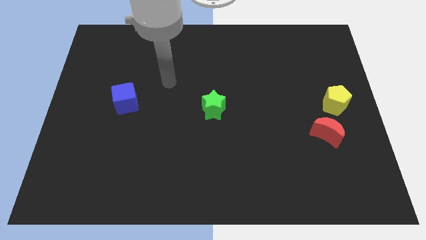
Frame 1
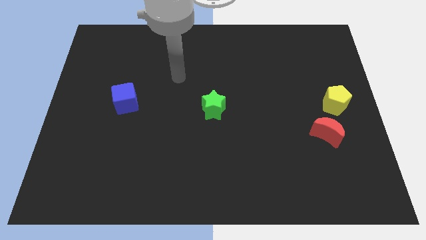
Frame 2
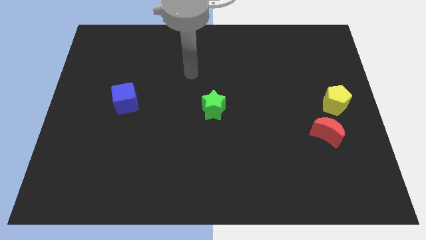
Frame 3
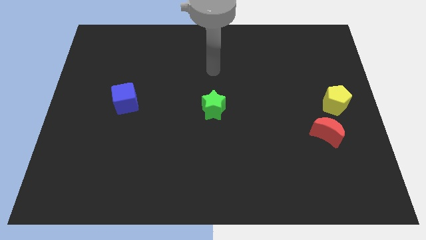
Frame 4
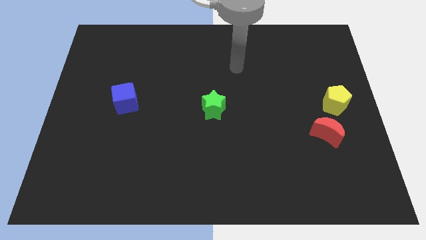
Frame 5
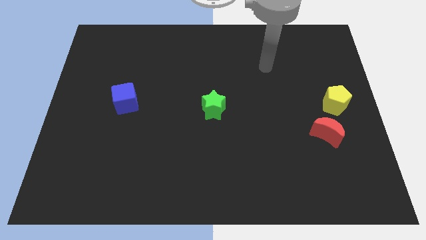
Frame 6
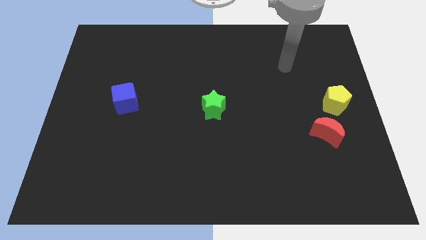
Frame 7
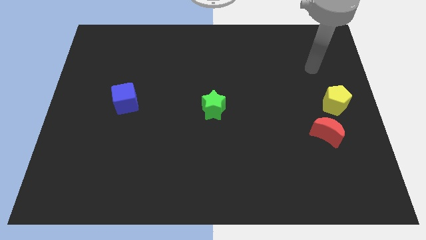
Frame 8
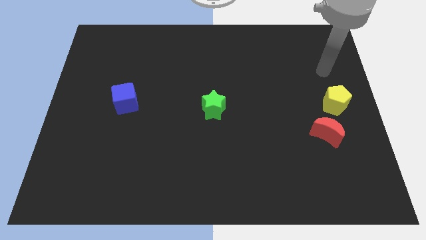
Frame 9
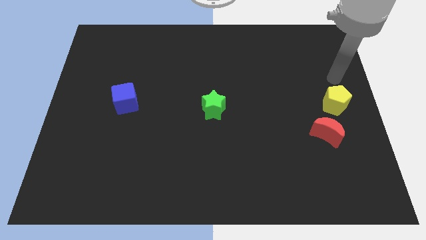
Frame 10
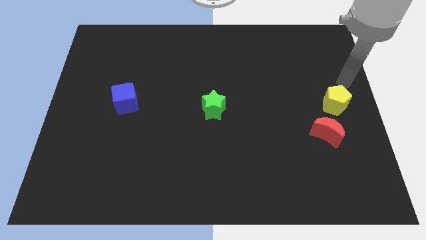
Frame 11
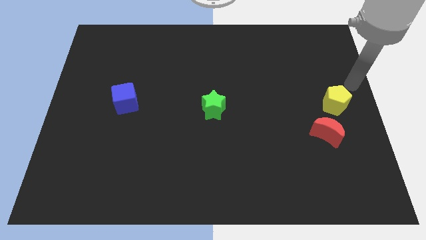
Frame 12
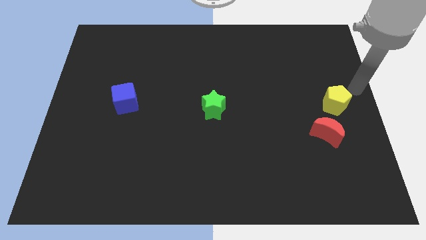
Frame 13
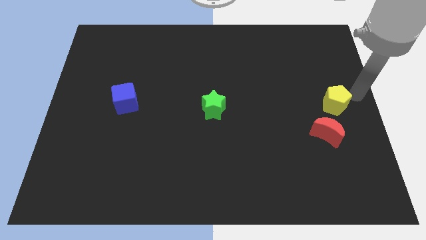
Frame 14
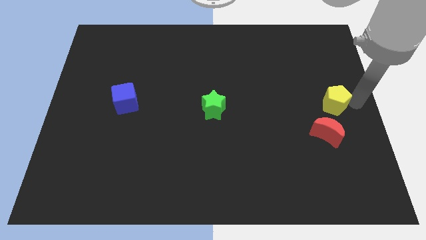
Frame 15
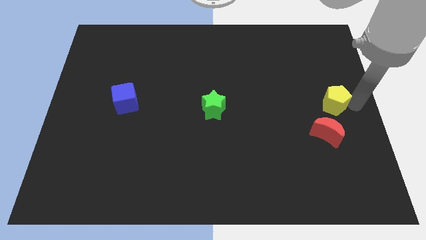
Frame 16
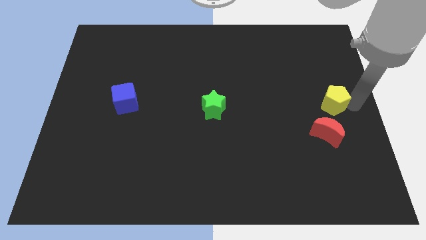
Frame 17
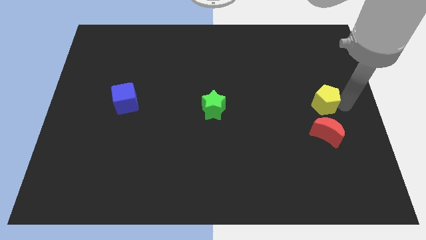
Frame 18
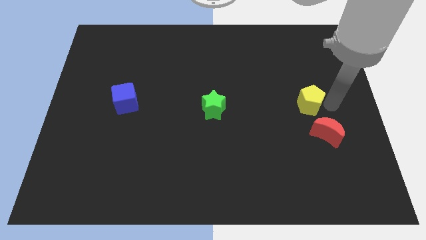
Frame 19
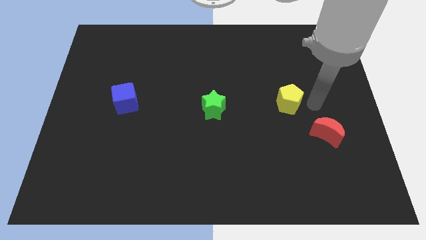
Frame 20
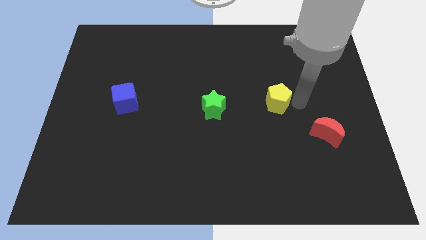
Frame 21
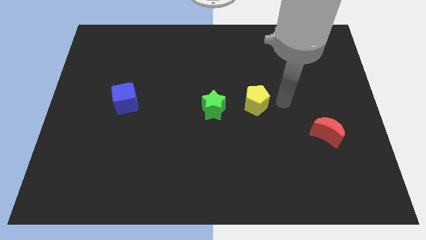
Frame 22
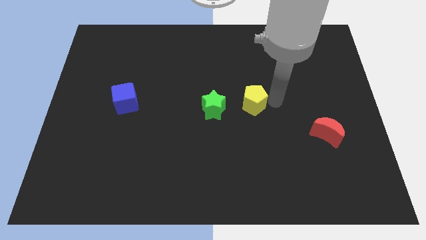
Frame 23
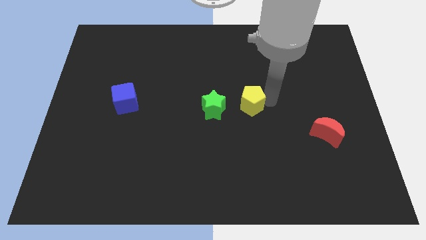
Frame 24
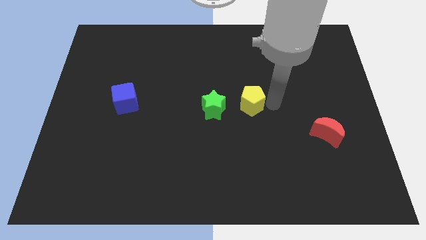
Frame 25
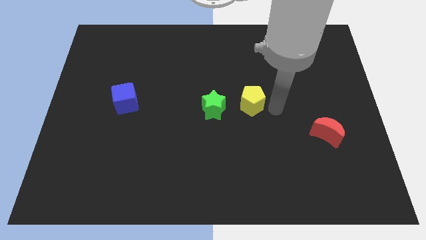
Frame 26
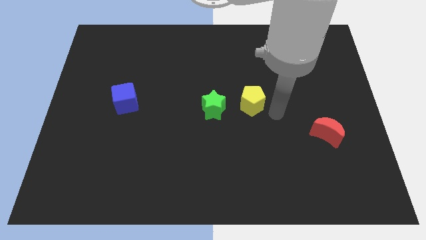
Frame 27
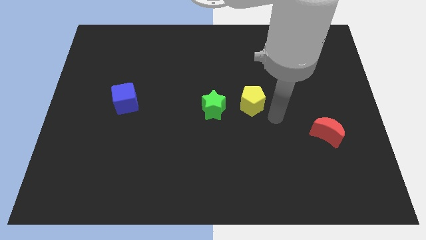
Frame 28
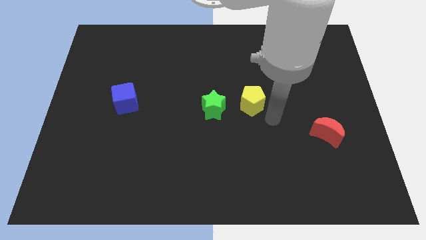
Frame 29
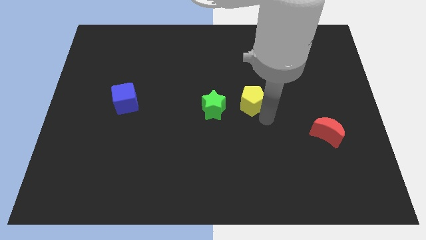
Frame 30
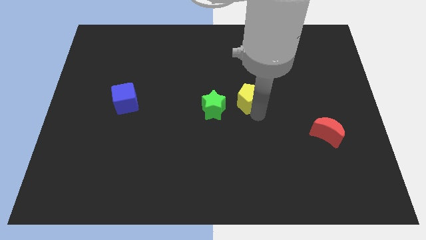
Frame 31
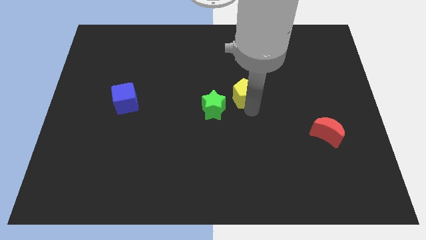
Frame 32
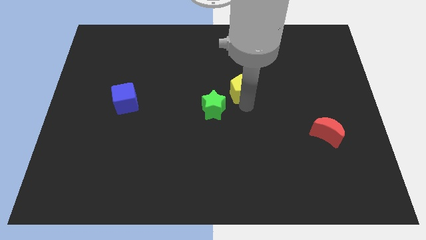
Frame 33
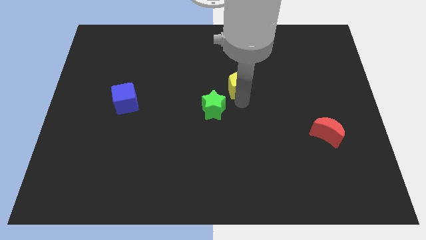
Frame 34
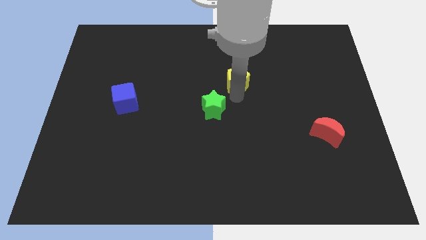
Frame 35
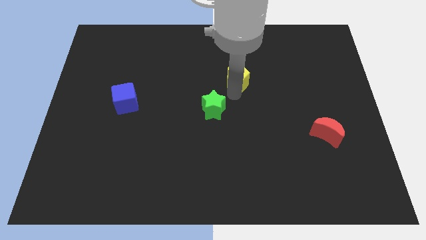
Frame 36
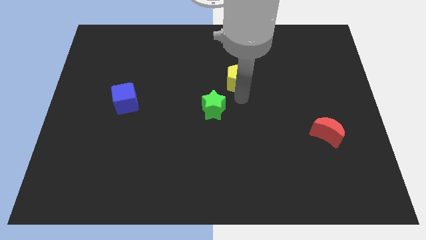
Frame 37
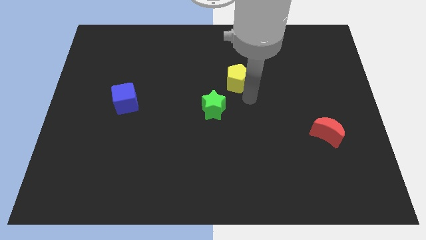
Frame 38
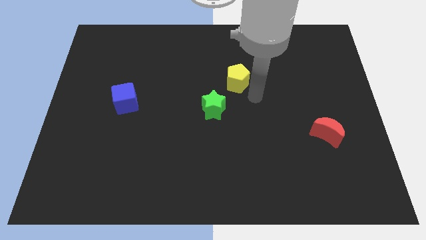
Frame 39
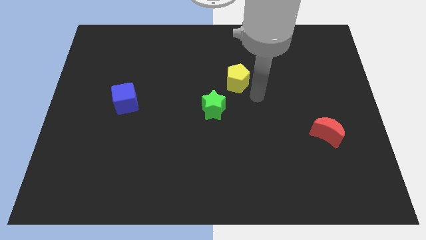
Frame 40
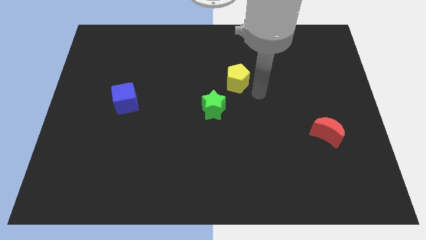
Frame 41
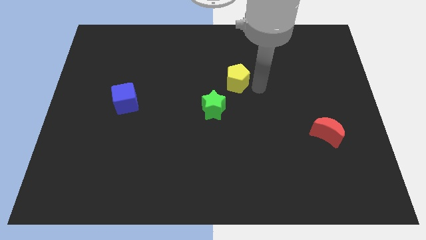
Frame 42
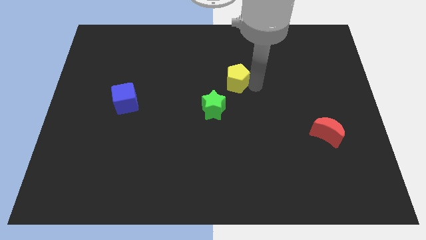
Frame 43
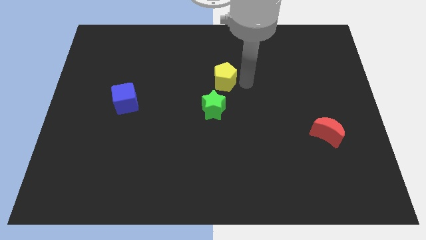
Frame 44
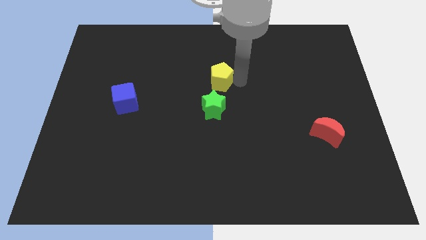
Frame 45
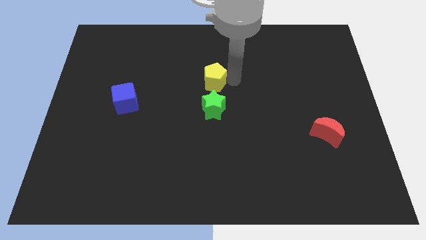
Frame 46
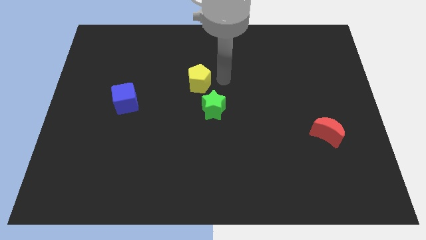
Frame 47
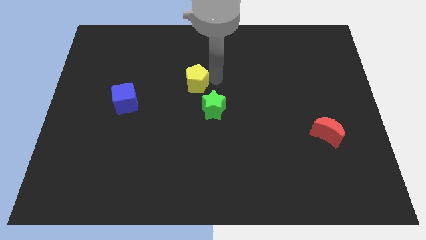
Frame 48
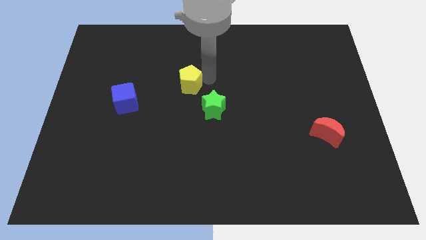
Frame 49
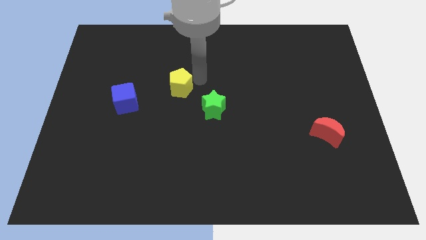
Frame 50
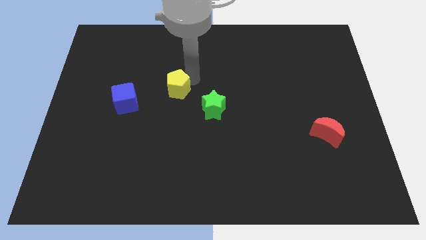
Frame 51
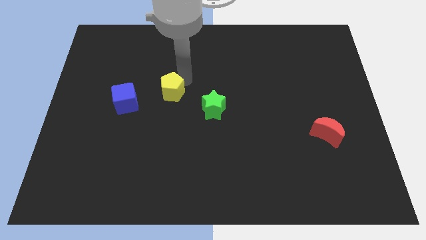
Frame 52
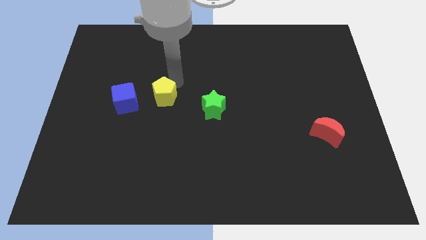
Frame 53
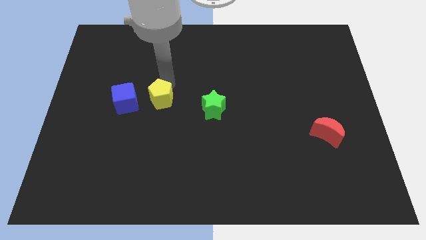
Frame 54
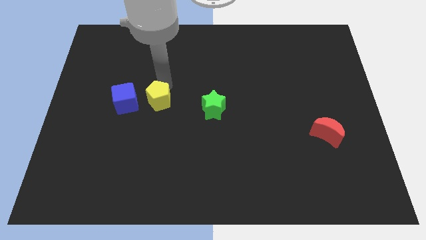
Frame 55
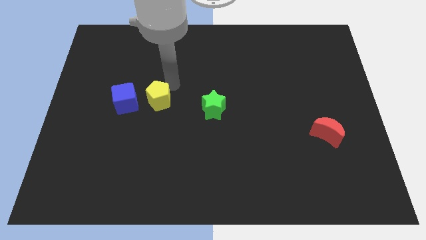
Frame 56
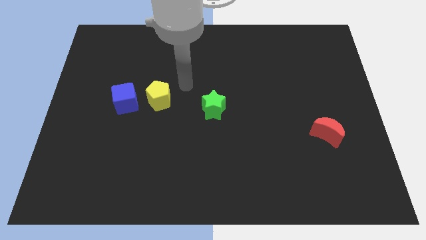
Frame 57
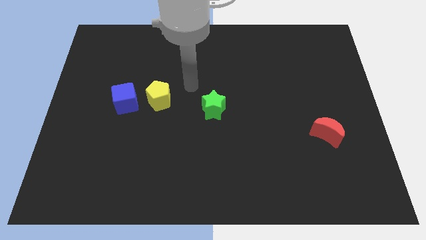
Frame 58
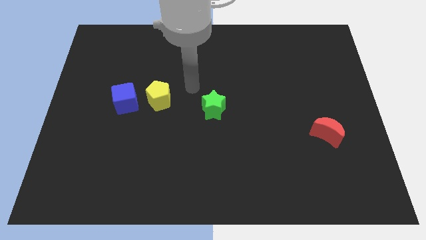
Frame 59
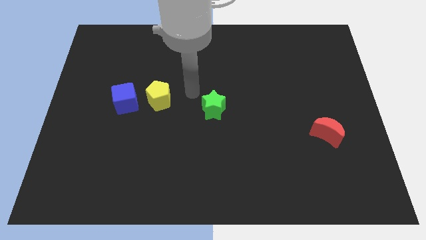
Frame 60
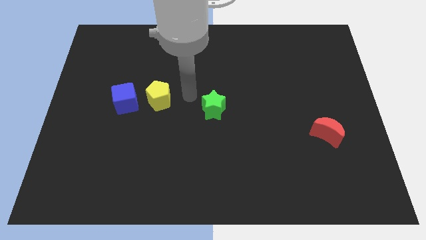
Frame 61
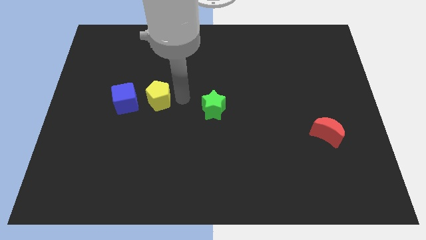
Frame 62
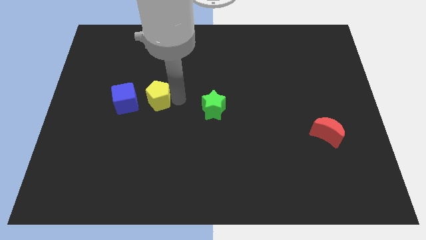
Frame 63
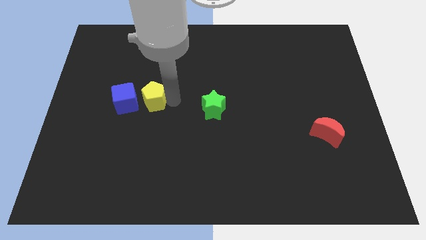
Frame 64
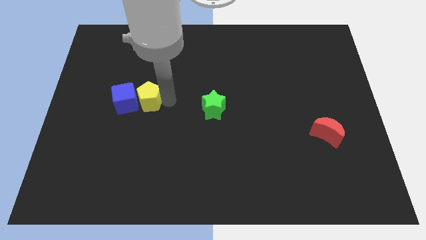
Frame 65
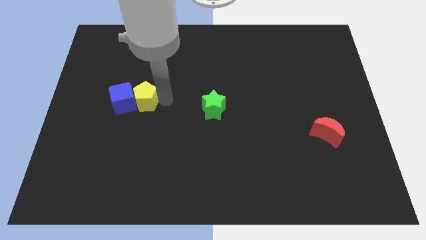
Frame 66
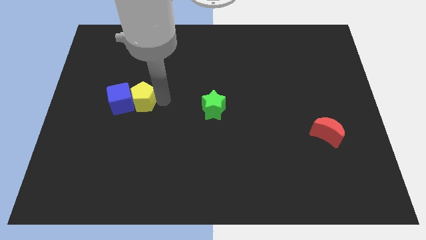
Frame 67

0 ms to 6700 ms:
put the yellow pentagon towards the blue cube

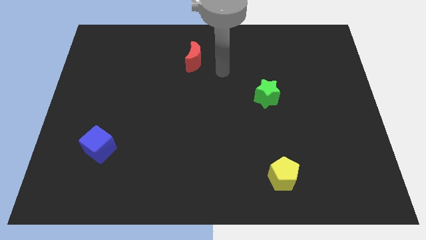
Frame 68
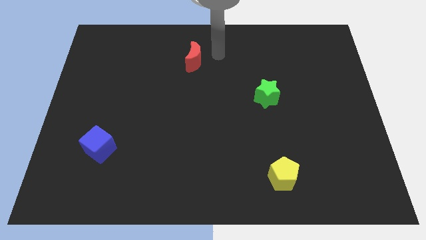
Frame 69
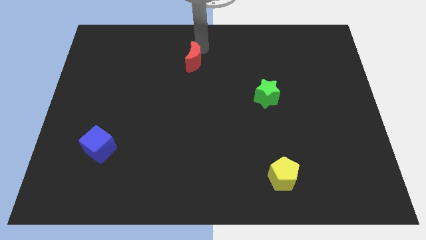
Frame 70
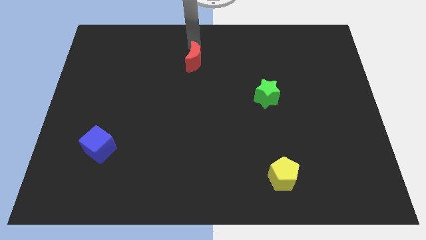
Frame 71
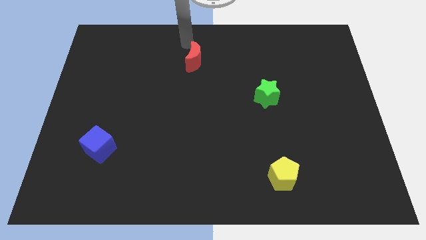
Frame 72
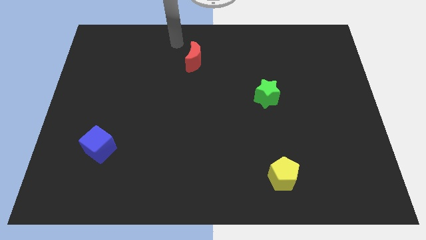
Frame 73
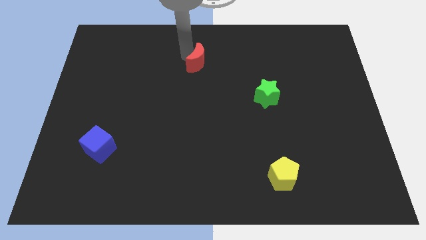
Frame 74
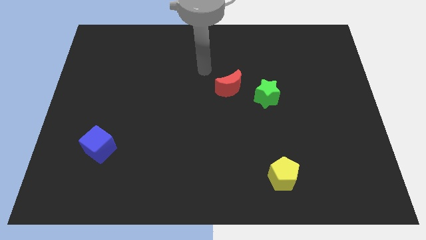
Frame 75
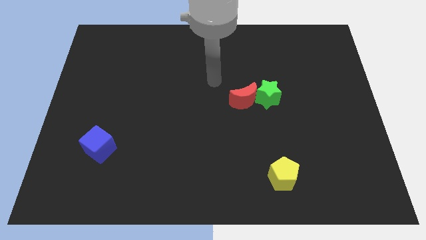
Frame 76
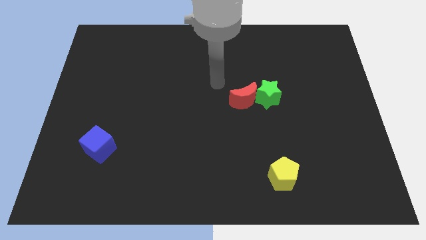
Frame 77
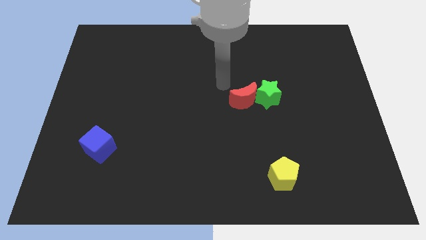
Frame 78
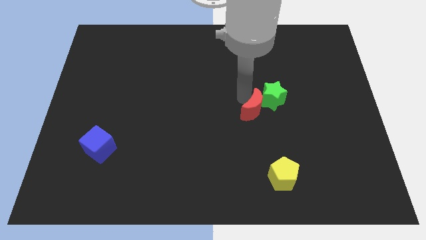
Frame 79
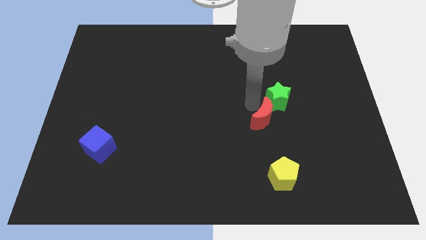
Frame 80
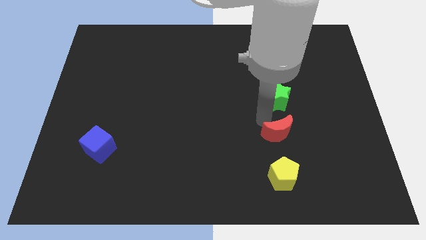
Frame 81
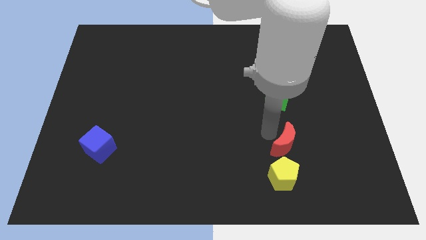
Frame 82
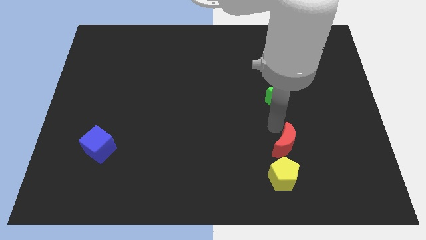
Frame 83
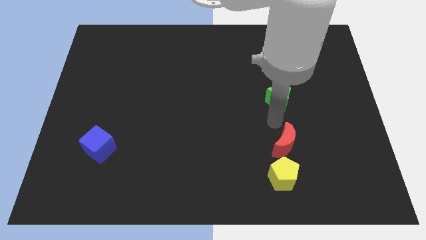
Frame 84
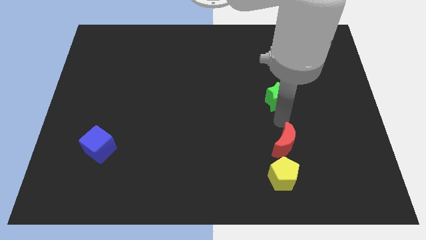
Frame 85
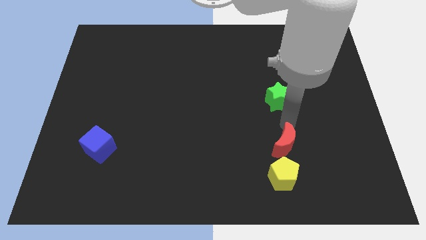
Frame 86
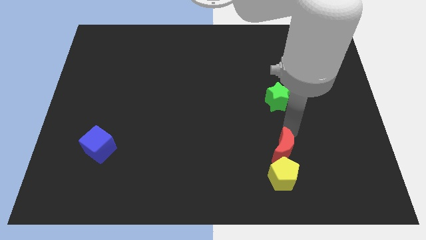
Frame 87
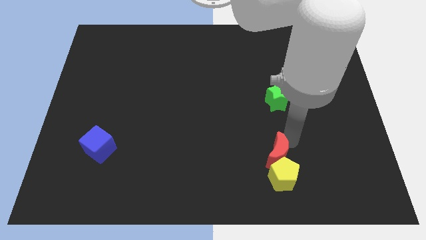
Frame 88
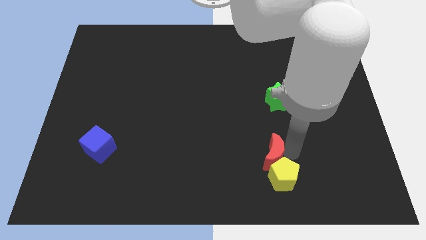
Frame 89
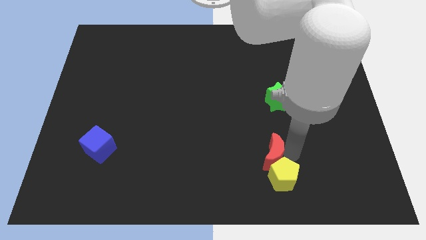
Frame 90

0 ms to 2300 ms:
put the moon close to the yellow block
